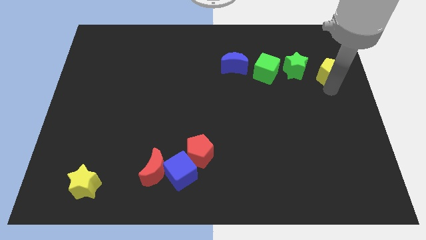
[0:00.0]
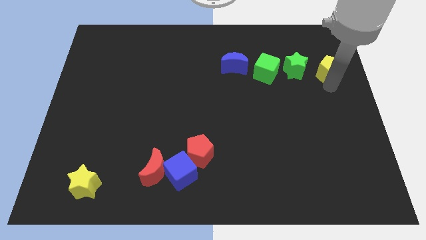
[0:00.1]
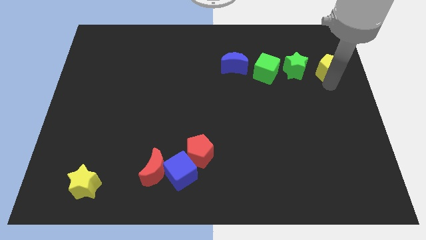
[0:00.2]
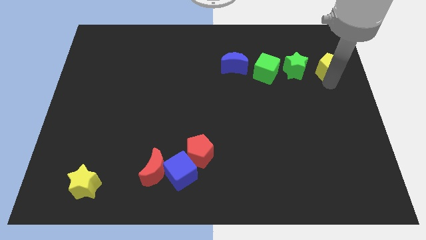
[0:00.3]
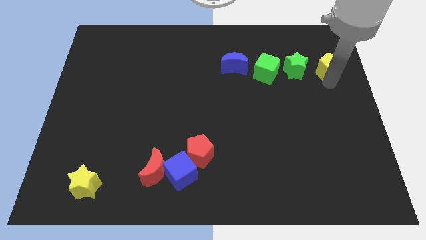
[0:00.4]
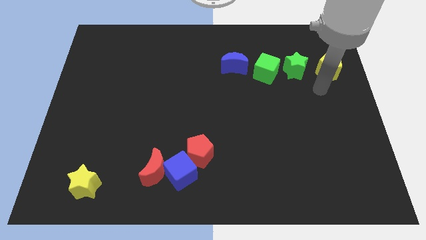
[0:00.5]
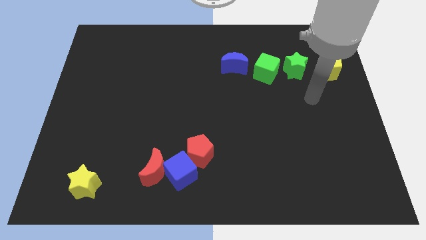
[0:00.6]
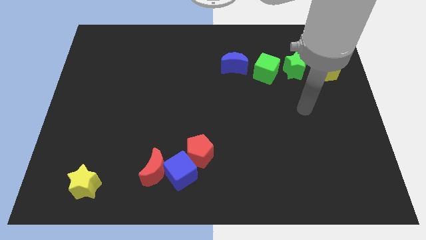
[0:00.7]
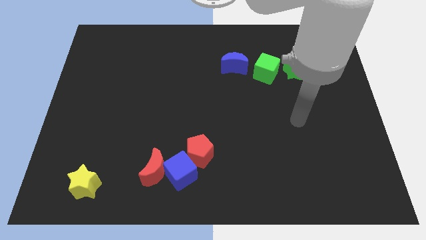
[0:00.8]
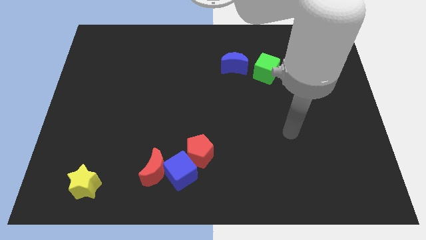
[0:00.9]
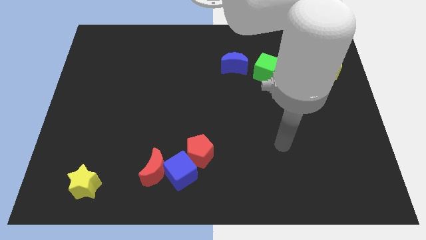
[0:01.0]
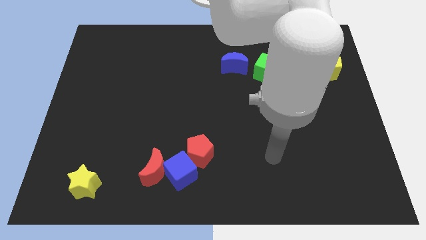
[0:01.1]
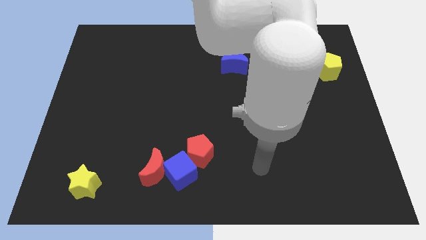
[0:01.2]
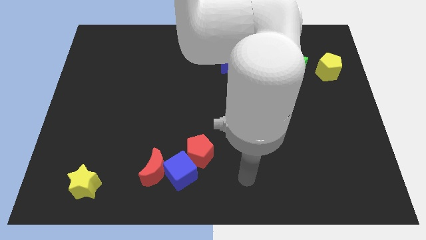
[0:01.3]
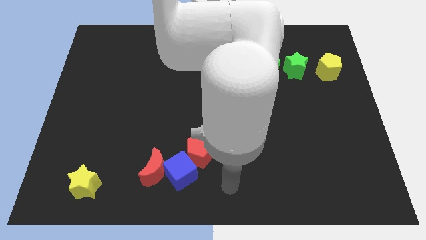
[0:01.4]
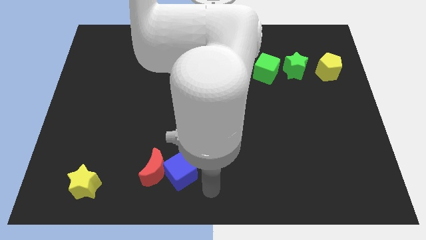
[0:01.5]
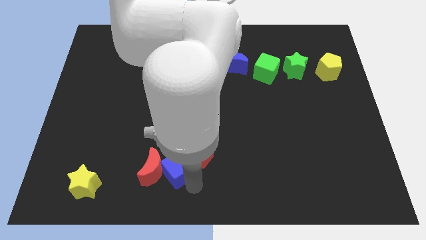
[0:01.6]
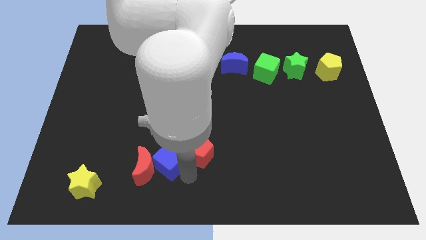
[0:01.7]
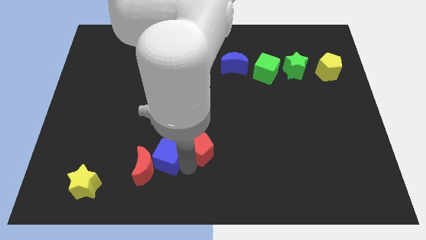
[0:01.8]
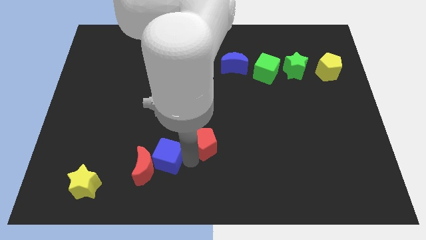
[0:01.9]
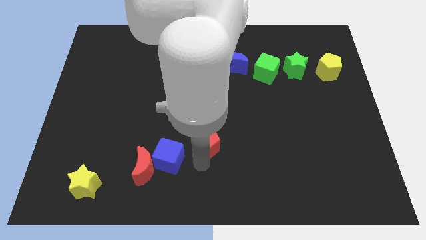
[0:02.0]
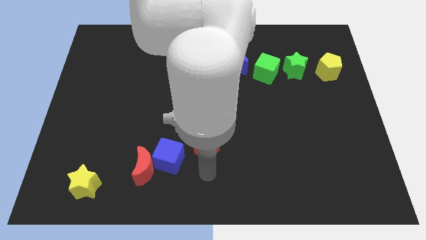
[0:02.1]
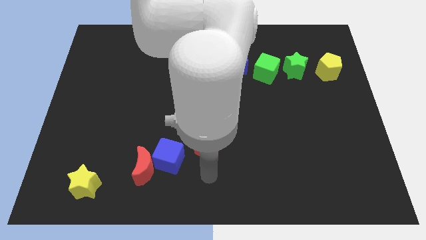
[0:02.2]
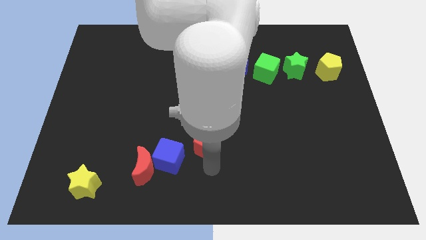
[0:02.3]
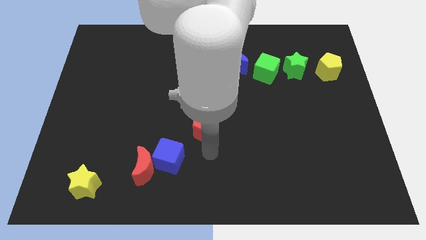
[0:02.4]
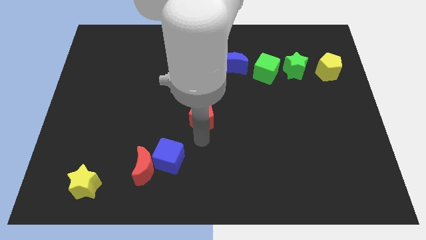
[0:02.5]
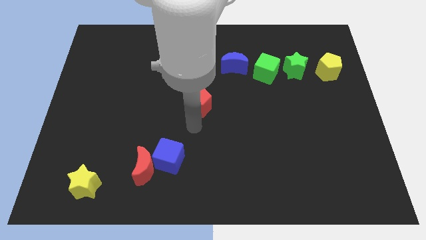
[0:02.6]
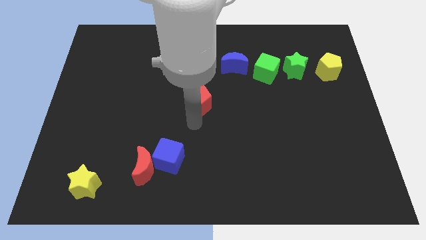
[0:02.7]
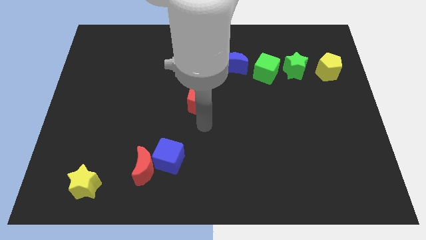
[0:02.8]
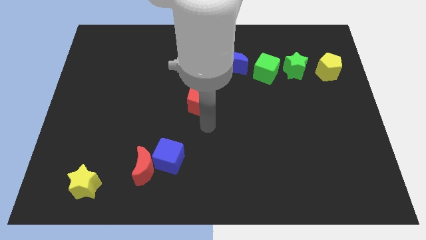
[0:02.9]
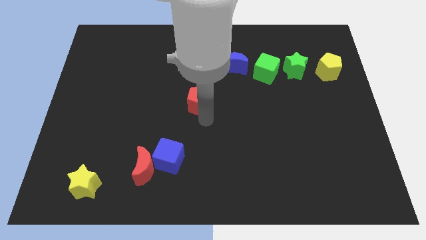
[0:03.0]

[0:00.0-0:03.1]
move the arm away from the yellow pentagon

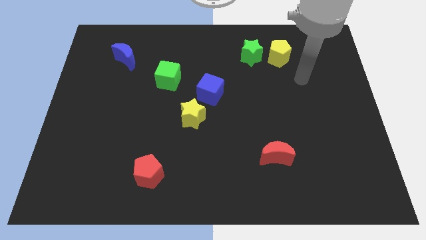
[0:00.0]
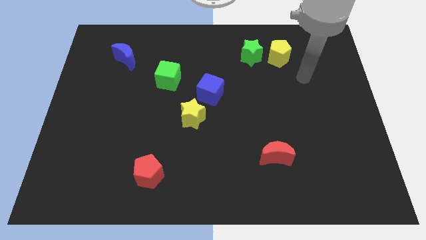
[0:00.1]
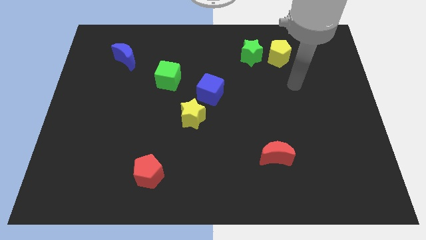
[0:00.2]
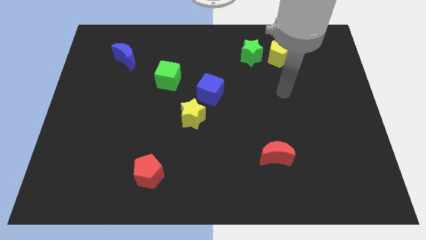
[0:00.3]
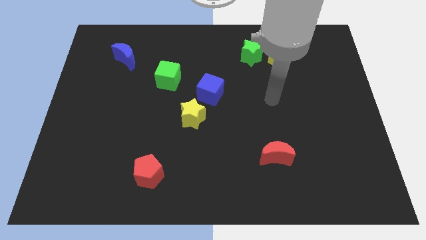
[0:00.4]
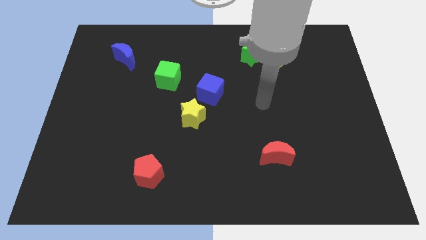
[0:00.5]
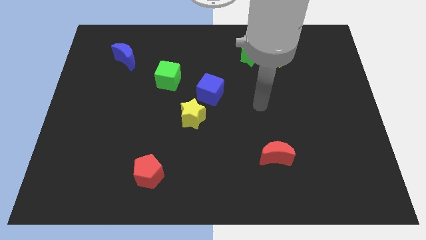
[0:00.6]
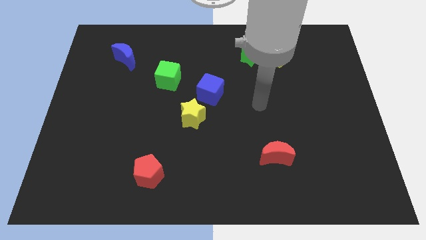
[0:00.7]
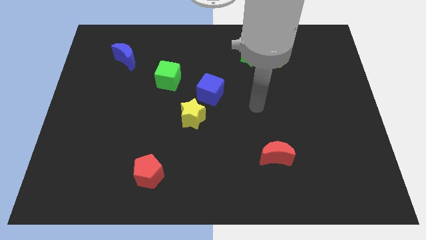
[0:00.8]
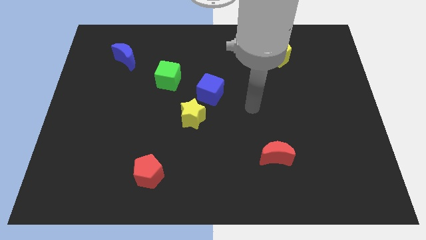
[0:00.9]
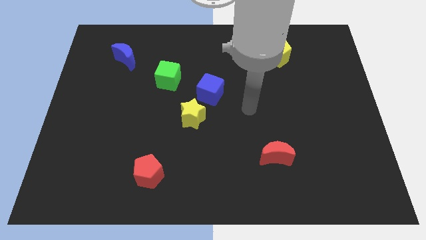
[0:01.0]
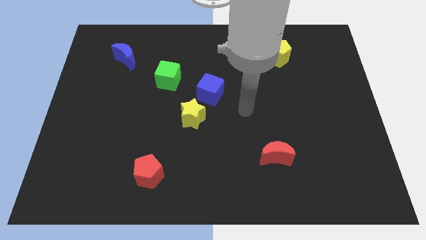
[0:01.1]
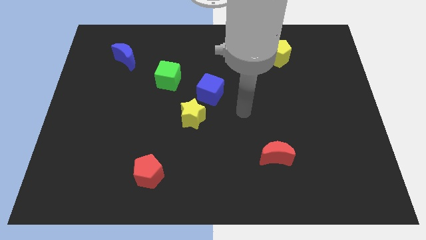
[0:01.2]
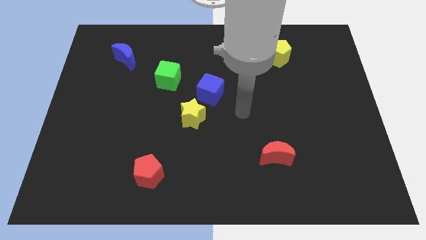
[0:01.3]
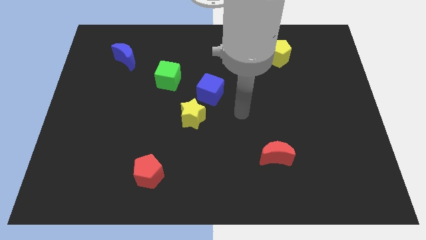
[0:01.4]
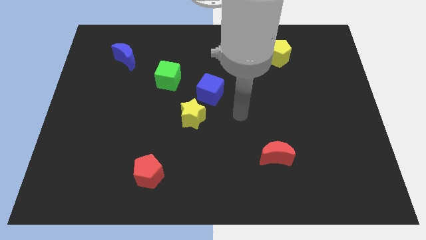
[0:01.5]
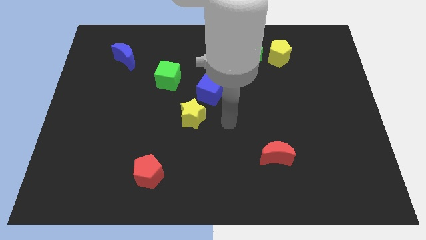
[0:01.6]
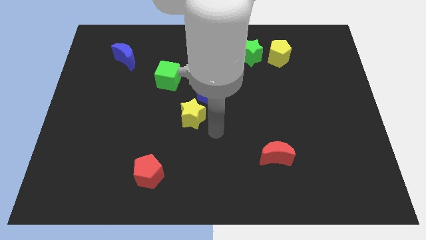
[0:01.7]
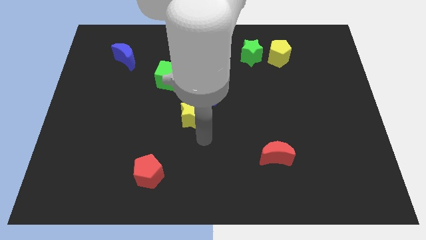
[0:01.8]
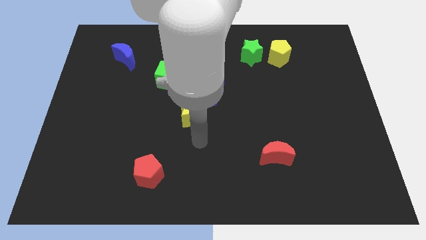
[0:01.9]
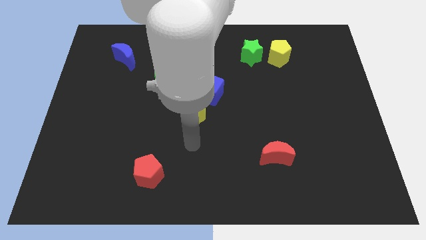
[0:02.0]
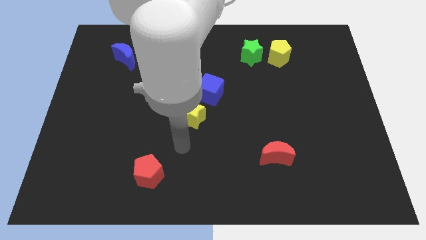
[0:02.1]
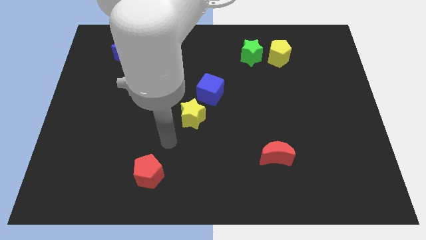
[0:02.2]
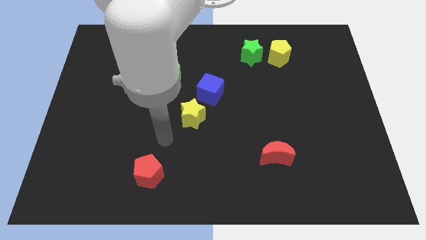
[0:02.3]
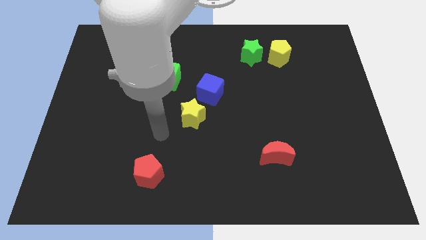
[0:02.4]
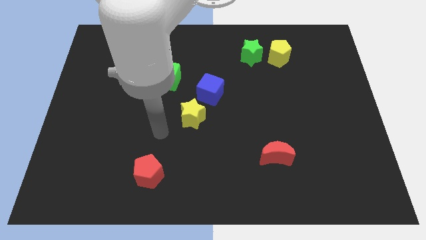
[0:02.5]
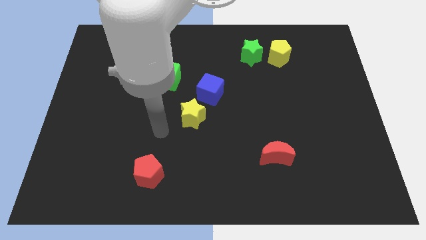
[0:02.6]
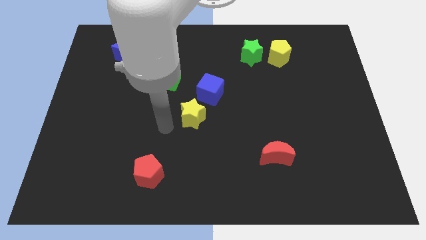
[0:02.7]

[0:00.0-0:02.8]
place your arm left to yellow star

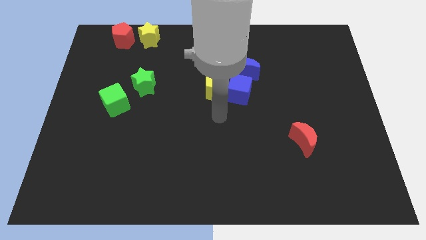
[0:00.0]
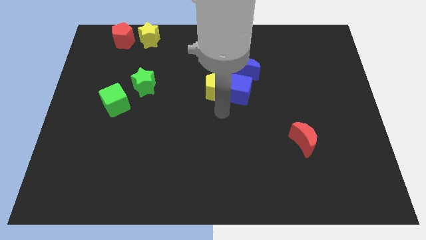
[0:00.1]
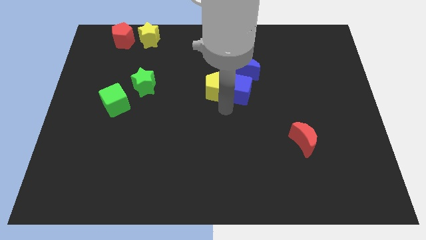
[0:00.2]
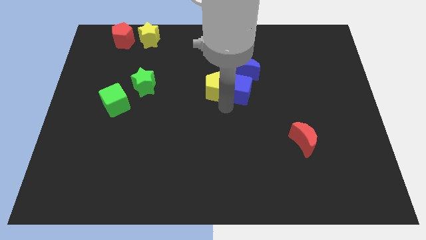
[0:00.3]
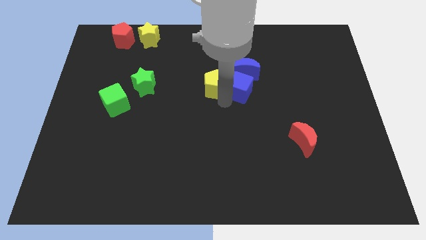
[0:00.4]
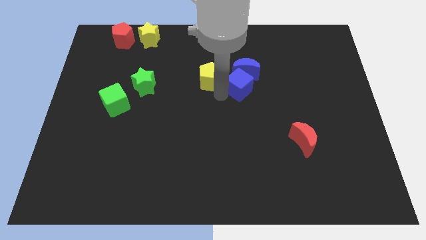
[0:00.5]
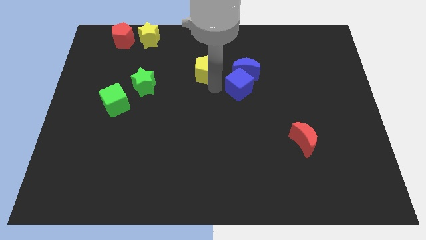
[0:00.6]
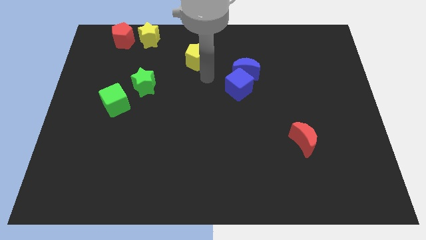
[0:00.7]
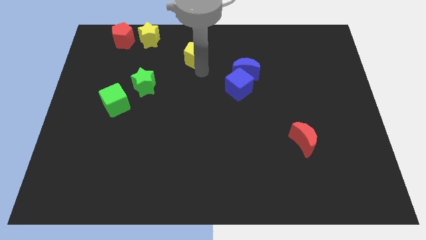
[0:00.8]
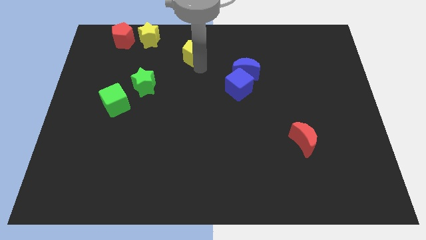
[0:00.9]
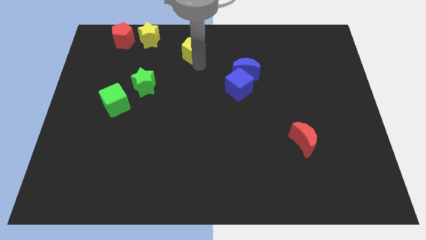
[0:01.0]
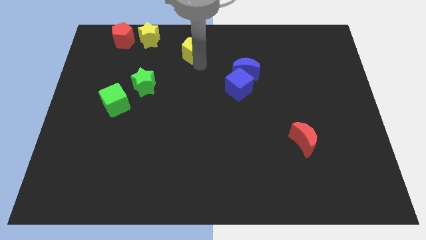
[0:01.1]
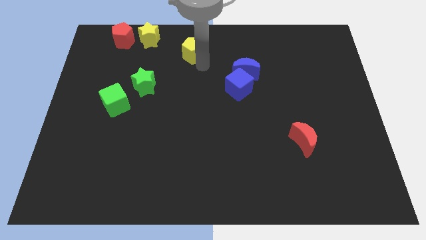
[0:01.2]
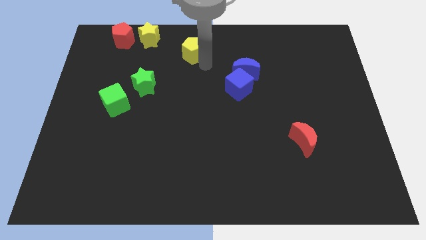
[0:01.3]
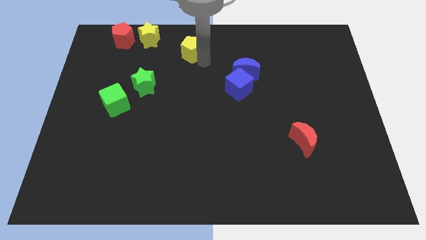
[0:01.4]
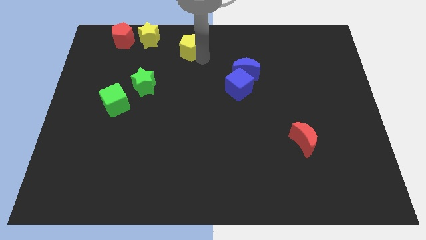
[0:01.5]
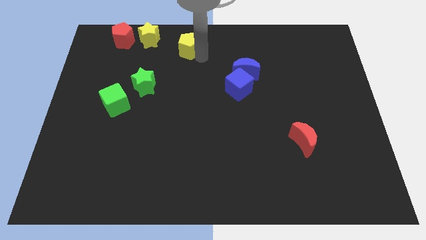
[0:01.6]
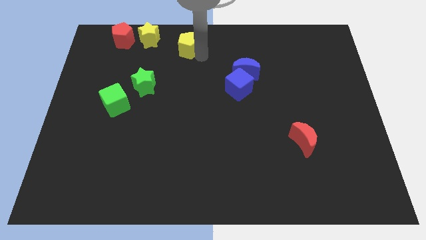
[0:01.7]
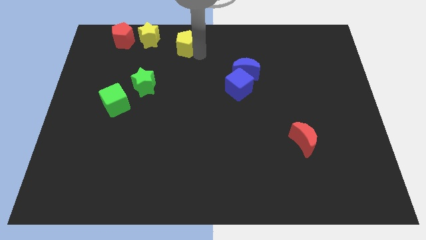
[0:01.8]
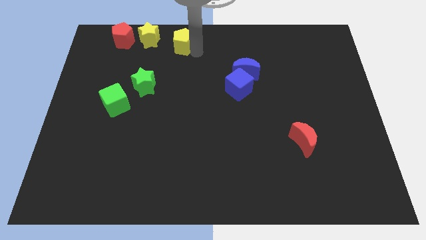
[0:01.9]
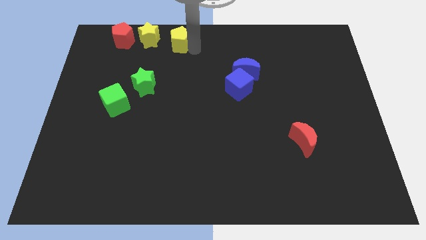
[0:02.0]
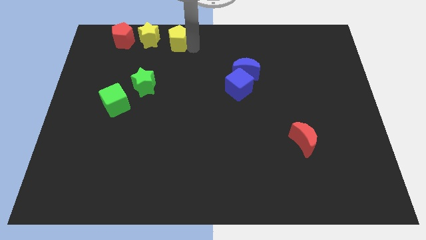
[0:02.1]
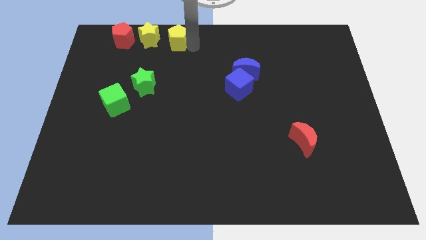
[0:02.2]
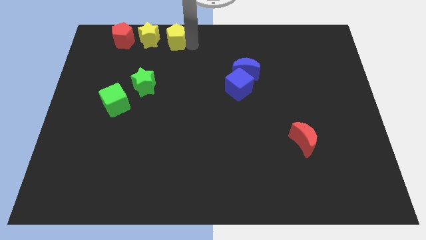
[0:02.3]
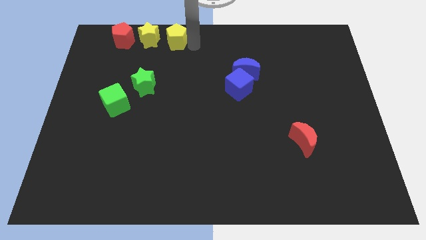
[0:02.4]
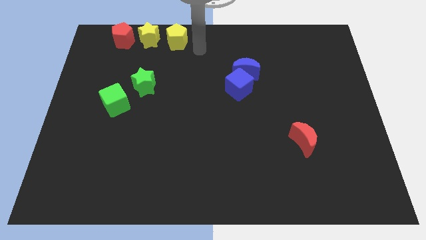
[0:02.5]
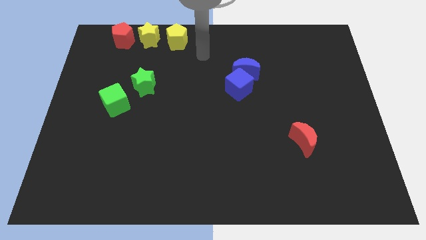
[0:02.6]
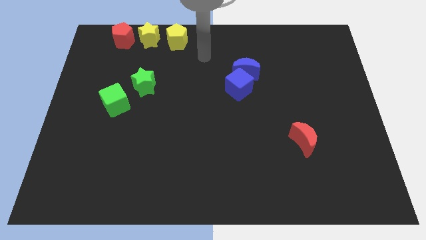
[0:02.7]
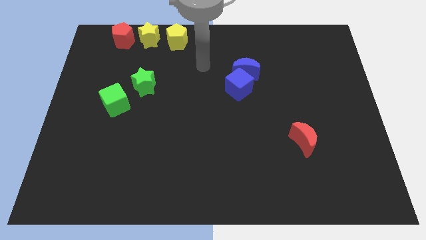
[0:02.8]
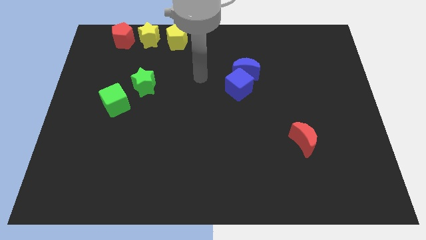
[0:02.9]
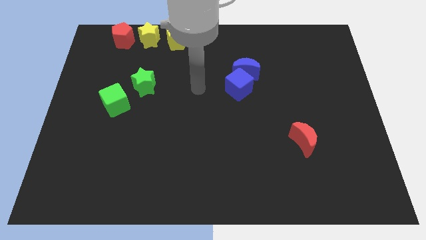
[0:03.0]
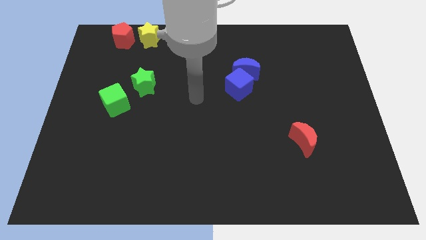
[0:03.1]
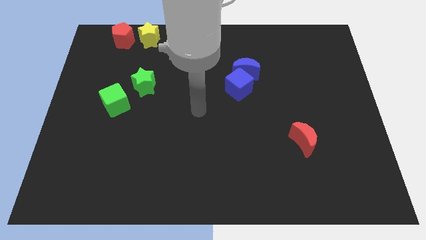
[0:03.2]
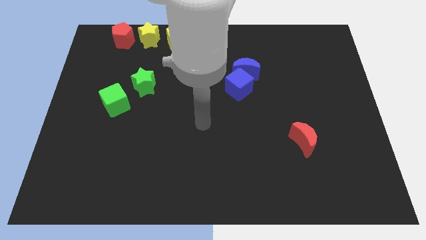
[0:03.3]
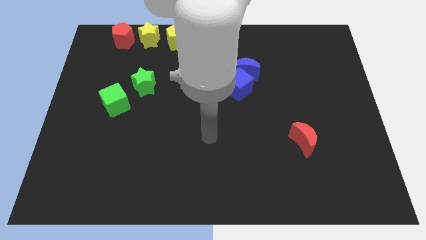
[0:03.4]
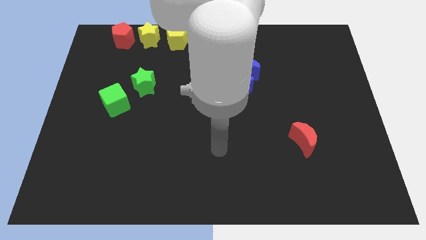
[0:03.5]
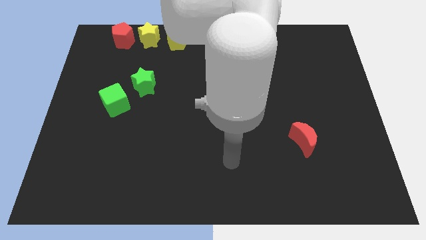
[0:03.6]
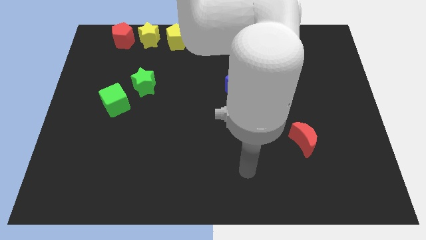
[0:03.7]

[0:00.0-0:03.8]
separate yellow pentagon from the blue cube
